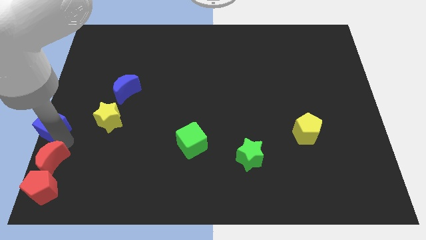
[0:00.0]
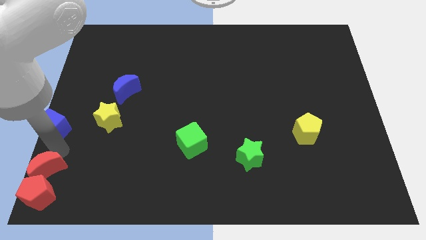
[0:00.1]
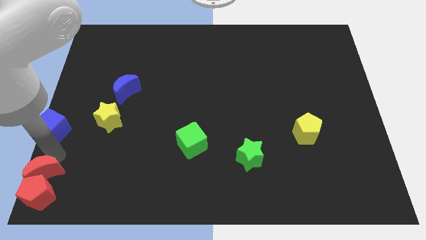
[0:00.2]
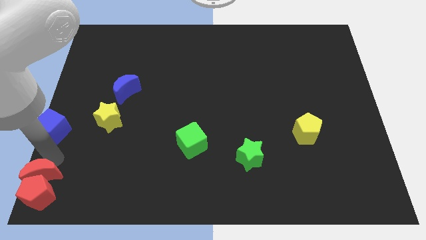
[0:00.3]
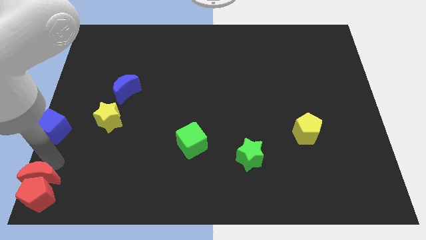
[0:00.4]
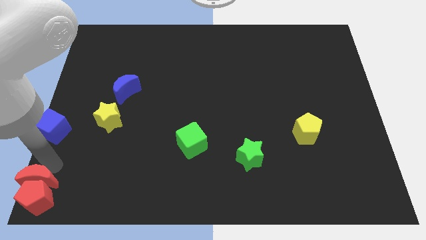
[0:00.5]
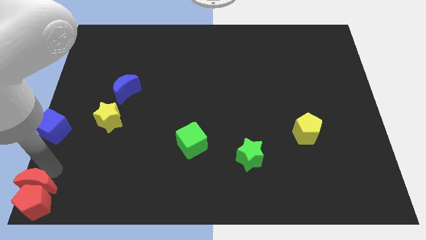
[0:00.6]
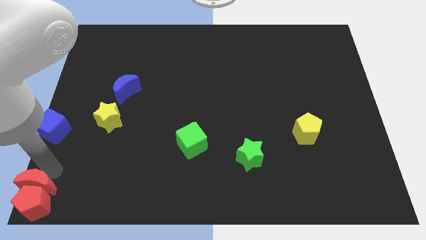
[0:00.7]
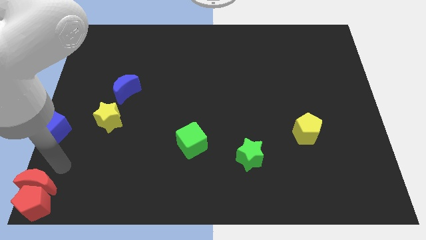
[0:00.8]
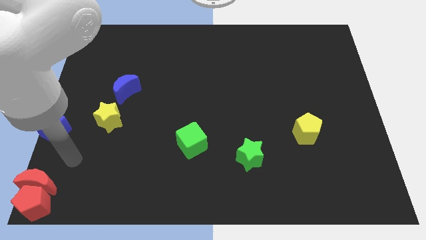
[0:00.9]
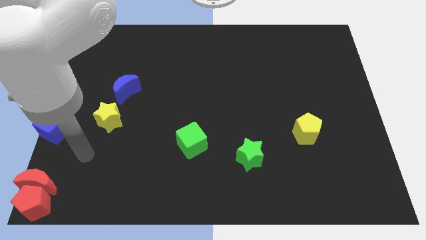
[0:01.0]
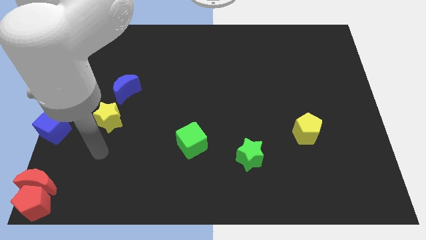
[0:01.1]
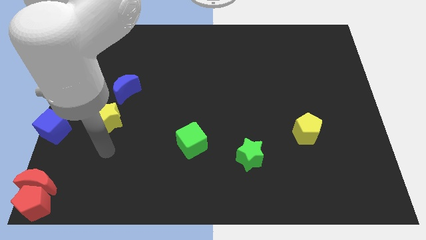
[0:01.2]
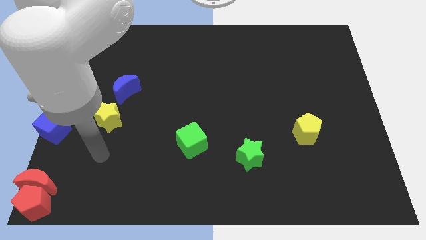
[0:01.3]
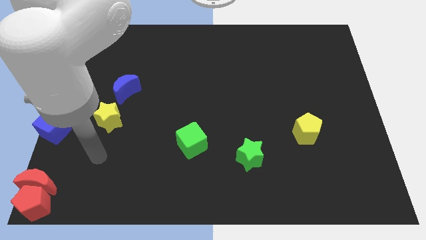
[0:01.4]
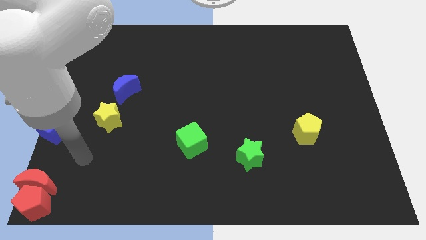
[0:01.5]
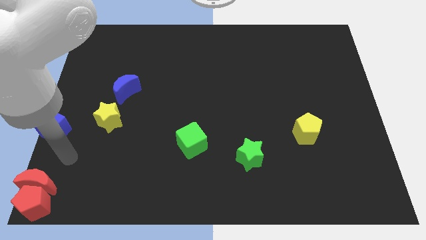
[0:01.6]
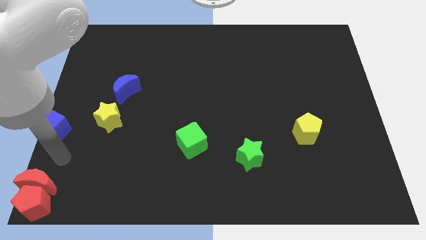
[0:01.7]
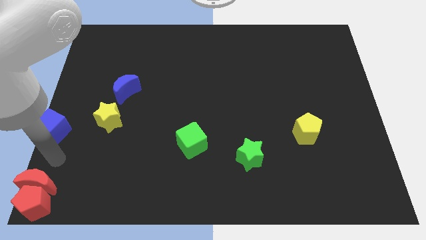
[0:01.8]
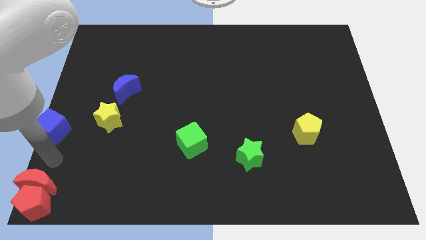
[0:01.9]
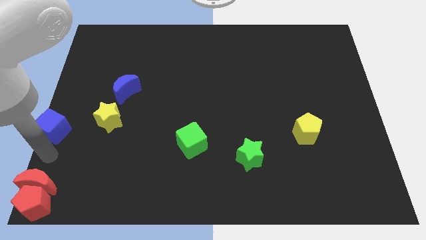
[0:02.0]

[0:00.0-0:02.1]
move the red pentagon slightly downwards with the red moon

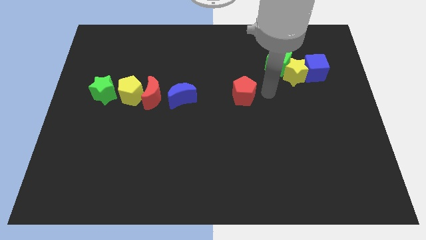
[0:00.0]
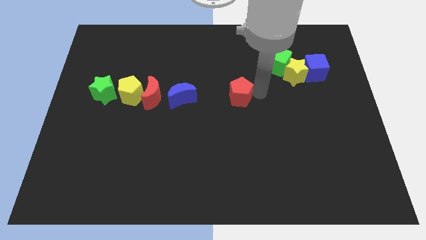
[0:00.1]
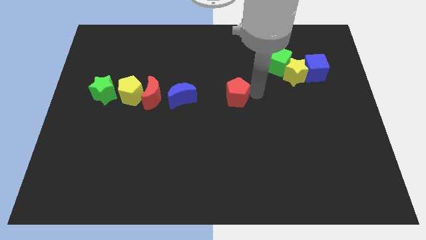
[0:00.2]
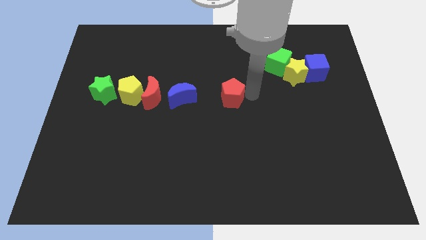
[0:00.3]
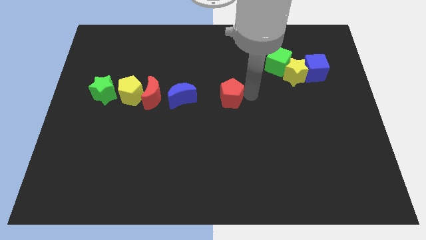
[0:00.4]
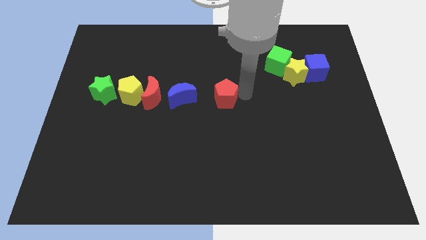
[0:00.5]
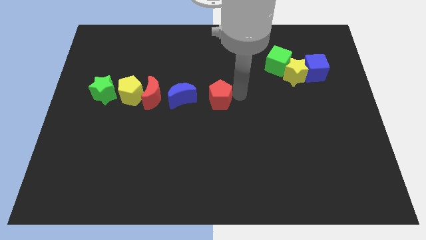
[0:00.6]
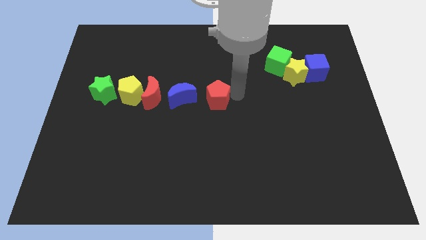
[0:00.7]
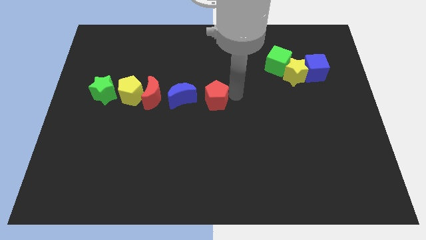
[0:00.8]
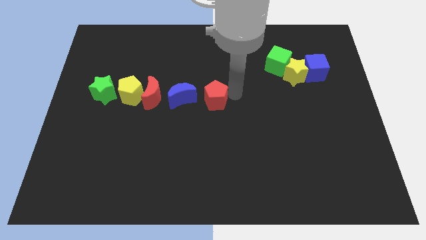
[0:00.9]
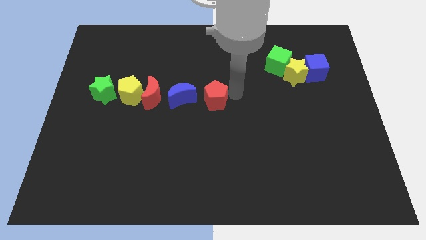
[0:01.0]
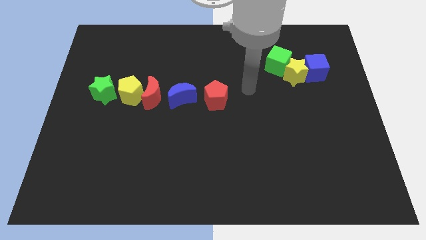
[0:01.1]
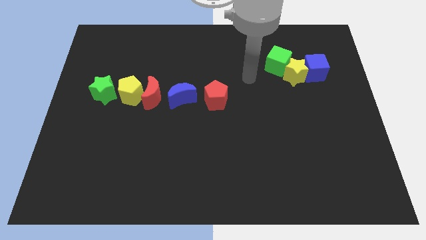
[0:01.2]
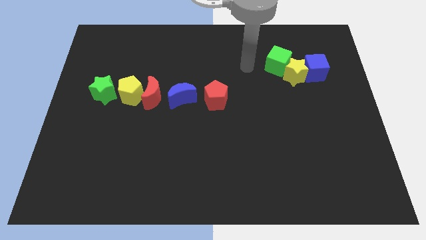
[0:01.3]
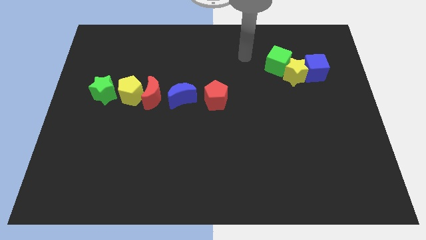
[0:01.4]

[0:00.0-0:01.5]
push the red pentagon close to the blue moon

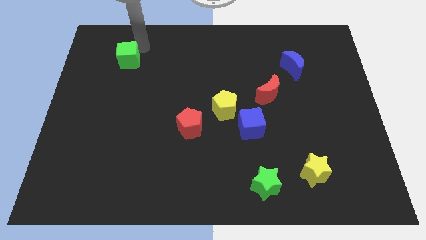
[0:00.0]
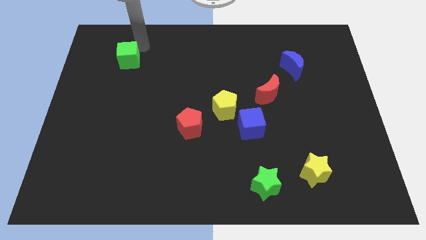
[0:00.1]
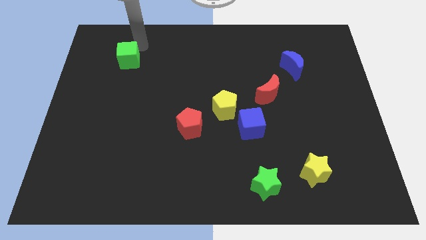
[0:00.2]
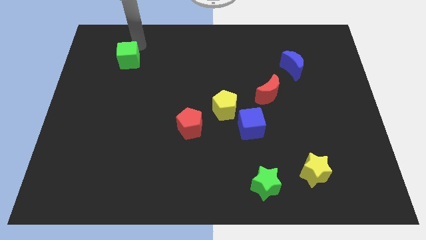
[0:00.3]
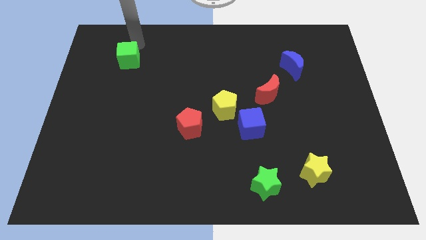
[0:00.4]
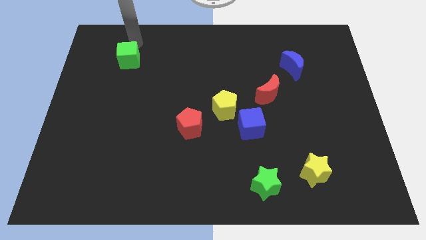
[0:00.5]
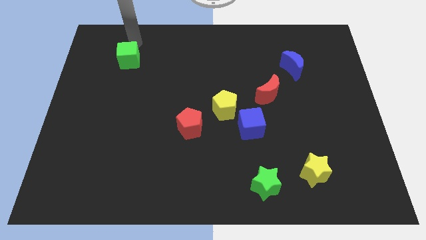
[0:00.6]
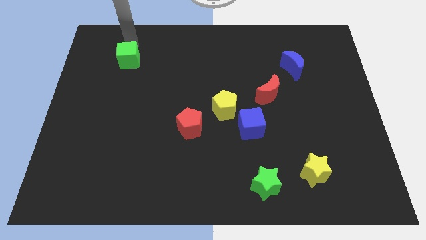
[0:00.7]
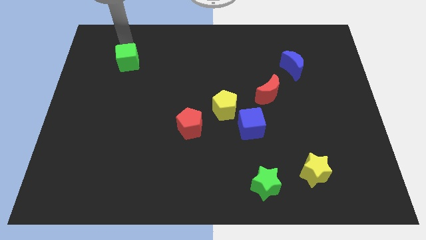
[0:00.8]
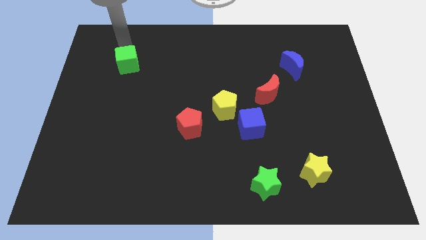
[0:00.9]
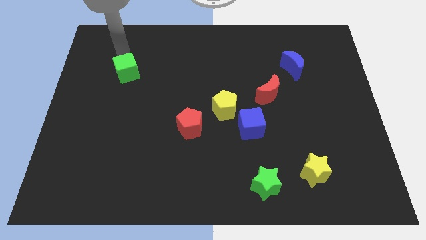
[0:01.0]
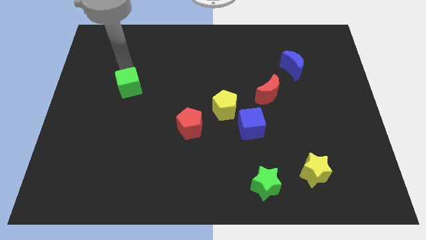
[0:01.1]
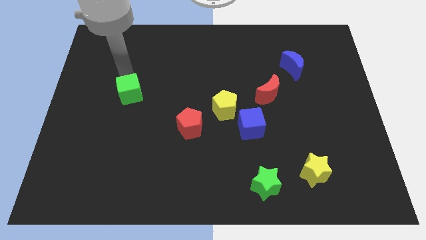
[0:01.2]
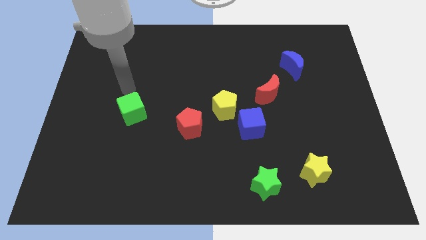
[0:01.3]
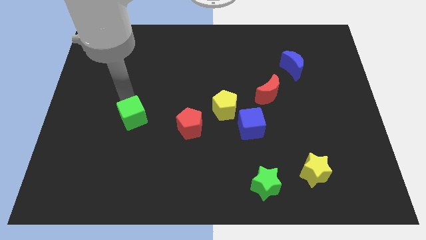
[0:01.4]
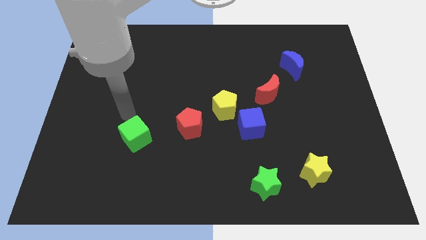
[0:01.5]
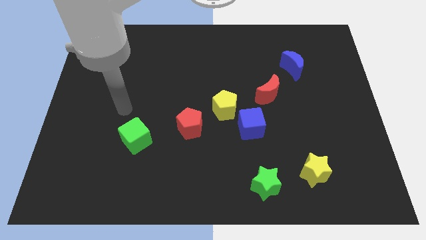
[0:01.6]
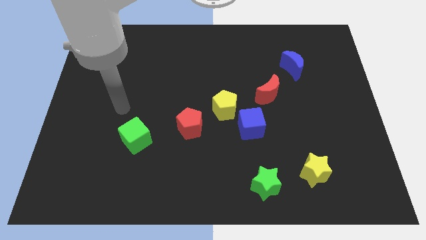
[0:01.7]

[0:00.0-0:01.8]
place the green cube left to the red pentagon

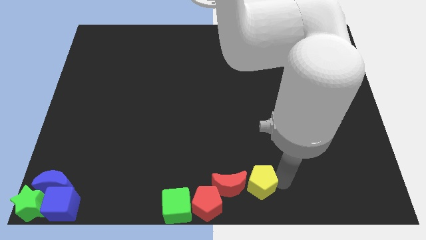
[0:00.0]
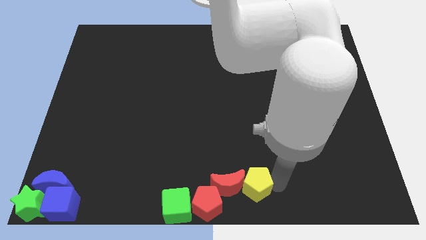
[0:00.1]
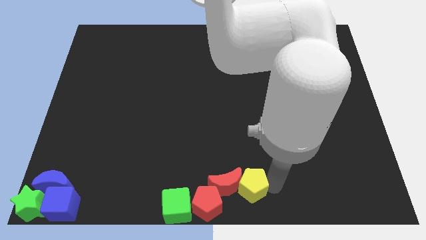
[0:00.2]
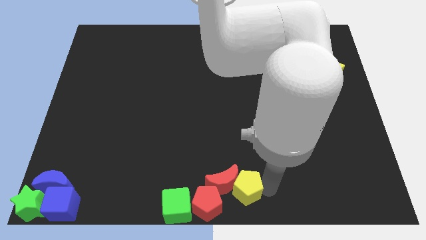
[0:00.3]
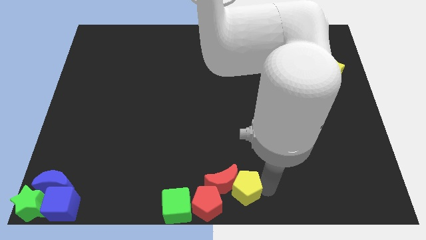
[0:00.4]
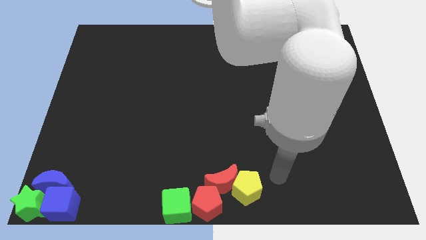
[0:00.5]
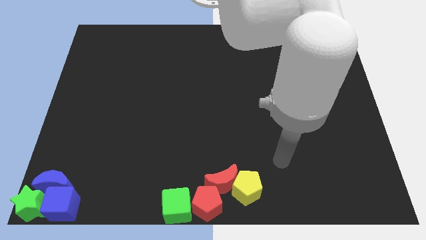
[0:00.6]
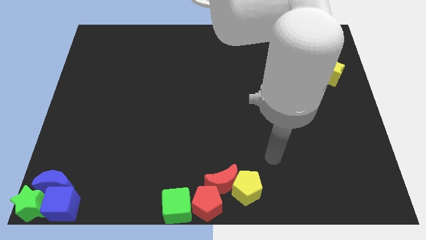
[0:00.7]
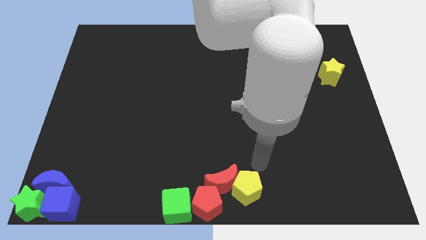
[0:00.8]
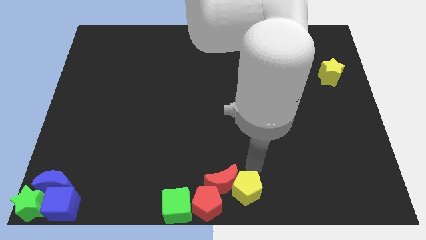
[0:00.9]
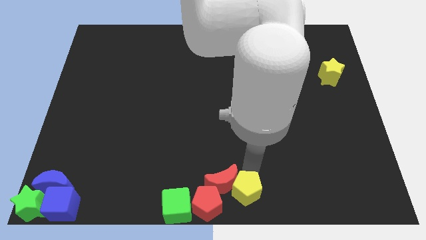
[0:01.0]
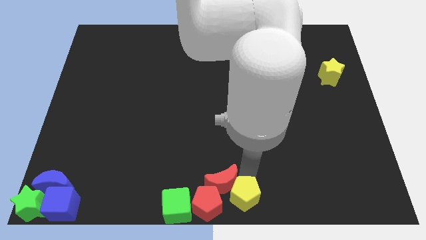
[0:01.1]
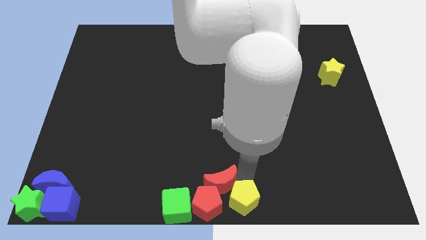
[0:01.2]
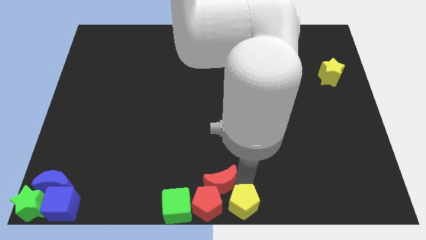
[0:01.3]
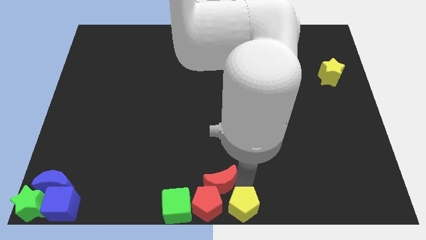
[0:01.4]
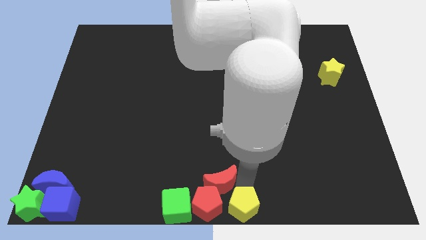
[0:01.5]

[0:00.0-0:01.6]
move the yellow pentagon right to the red pentagon

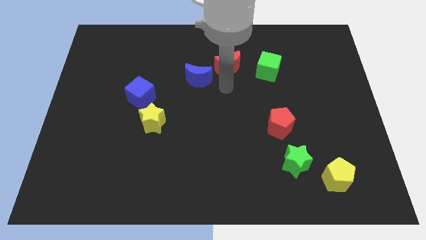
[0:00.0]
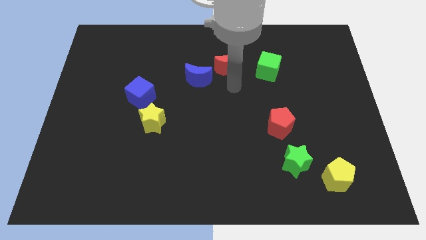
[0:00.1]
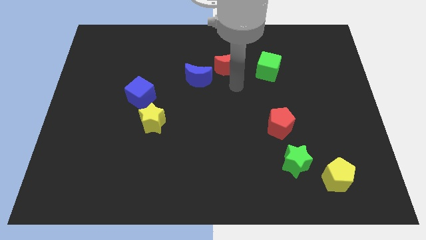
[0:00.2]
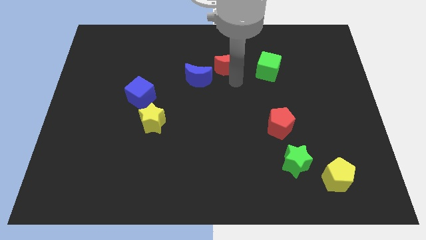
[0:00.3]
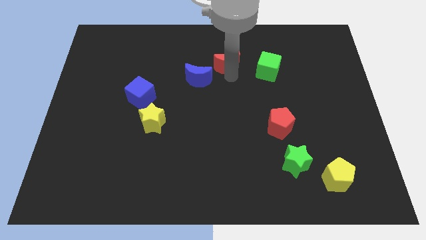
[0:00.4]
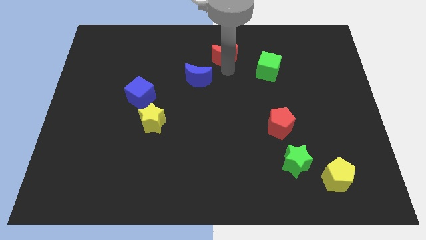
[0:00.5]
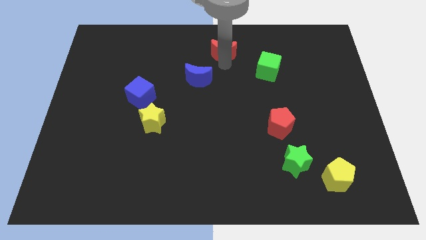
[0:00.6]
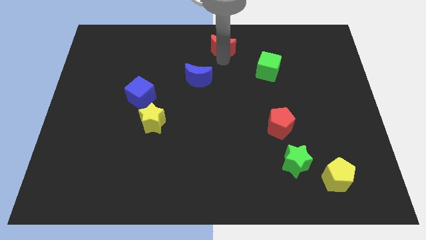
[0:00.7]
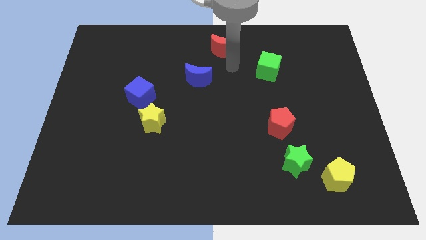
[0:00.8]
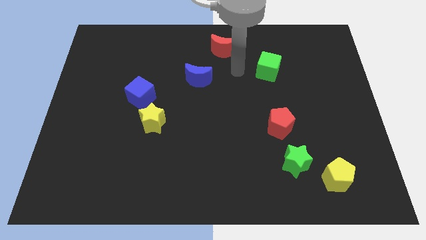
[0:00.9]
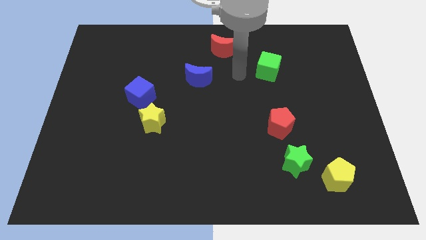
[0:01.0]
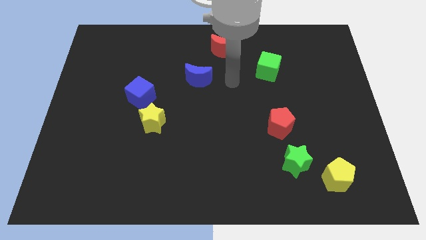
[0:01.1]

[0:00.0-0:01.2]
push the red crescent towards the top center

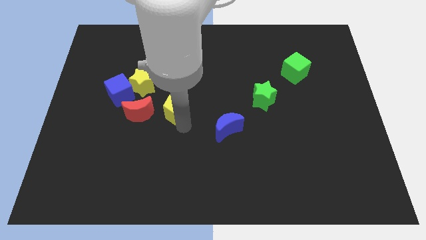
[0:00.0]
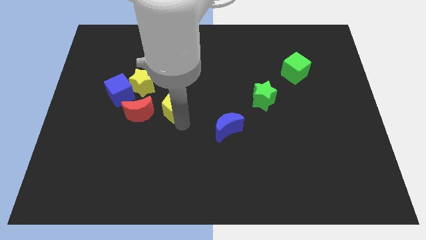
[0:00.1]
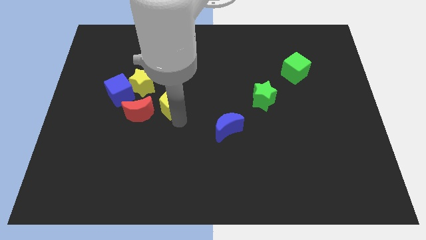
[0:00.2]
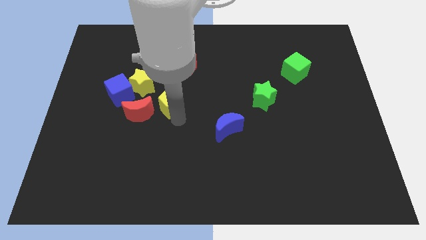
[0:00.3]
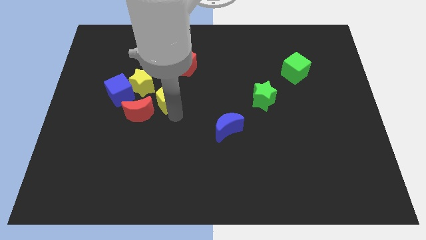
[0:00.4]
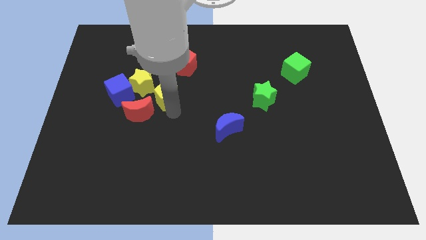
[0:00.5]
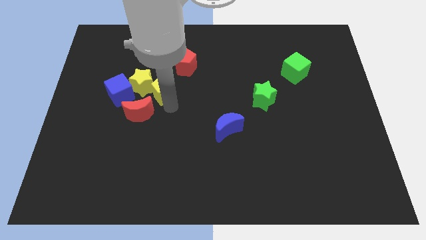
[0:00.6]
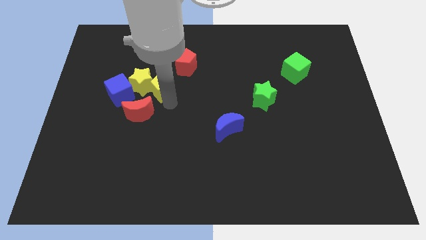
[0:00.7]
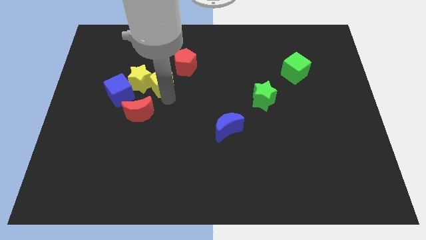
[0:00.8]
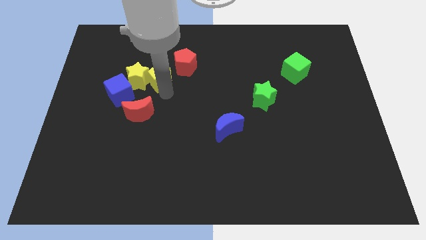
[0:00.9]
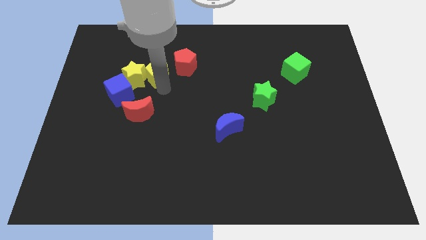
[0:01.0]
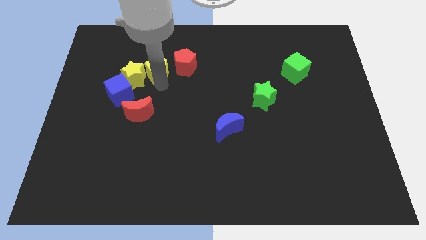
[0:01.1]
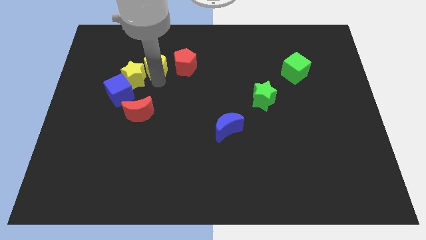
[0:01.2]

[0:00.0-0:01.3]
move the yellow pentagon between red pentagon and yellow star
